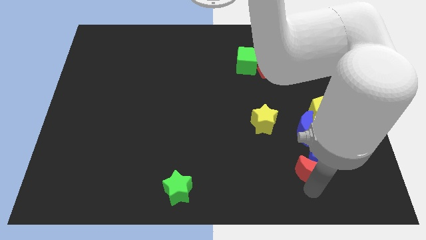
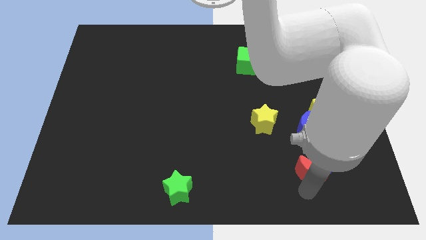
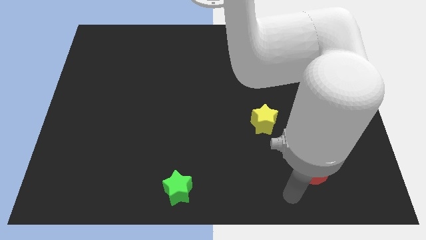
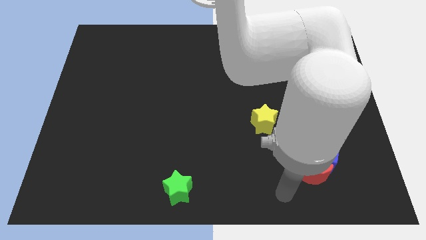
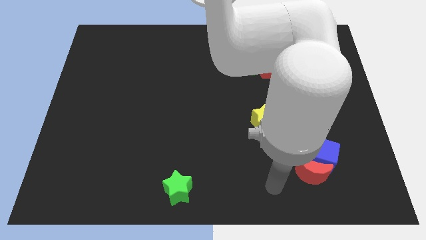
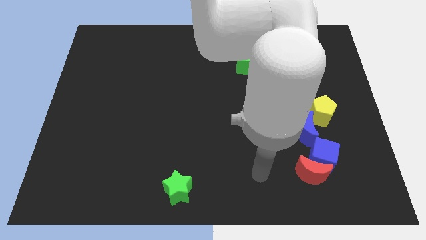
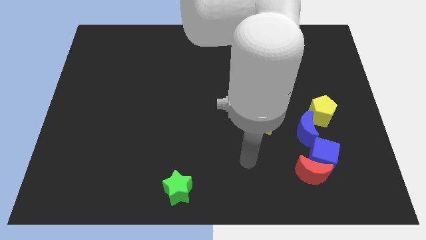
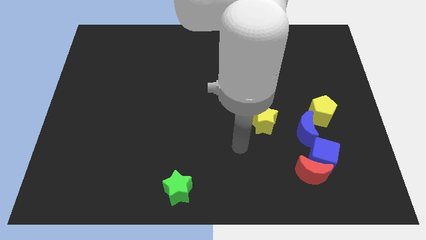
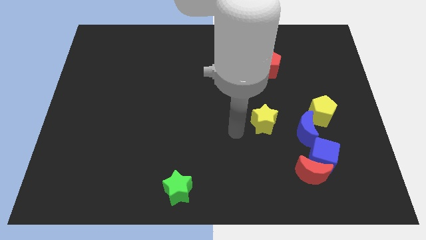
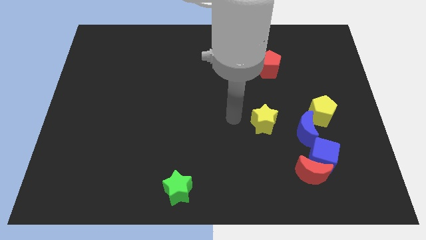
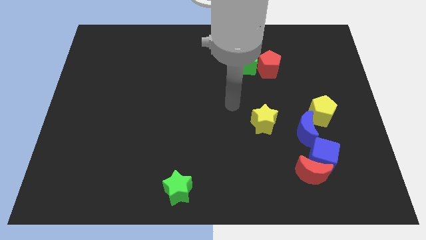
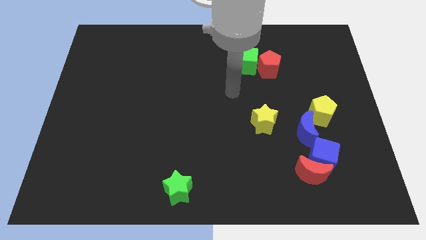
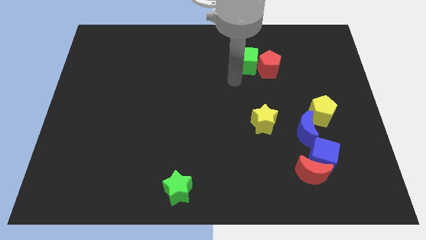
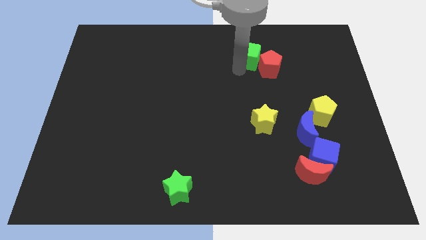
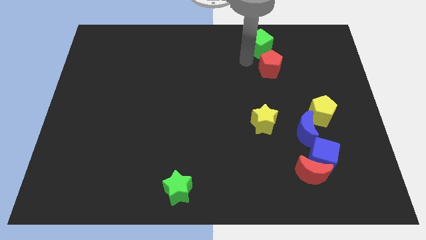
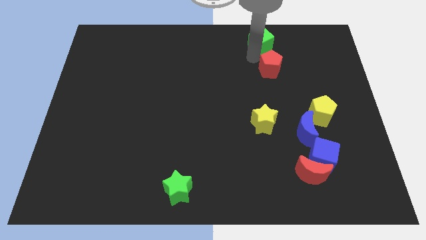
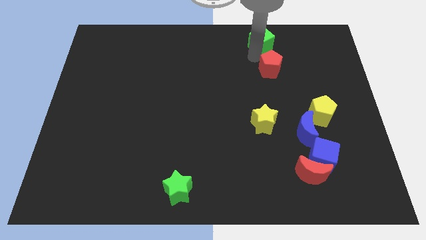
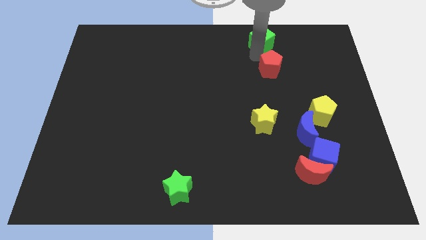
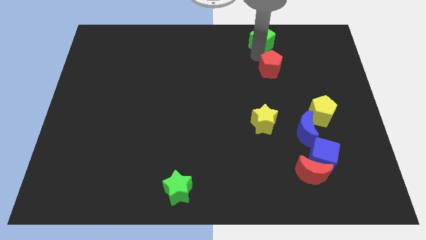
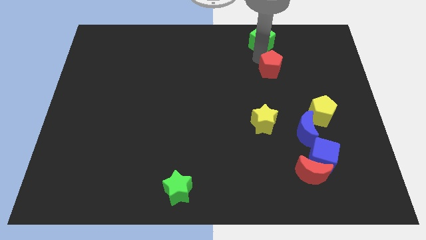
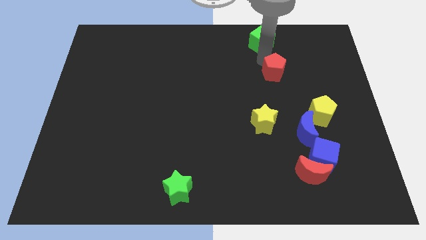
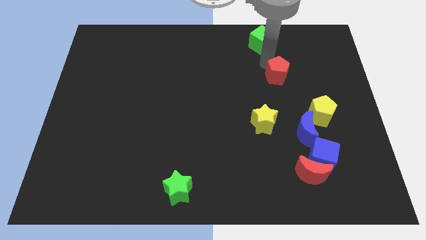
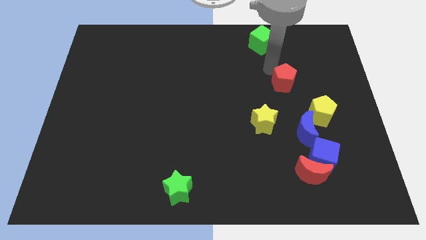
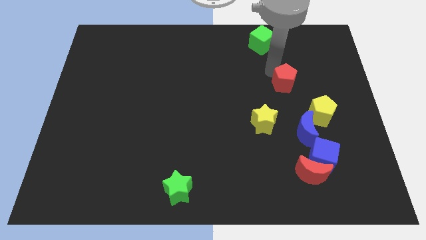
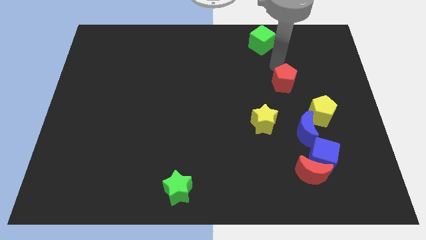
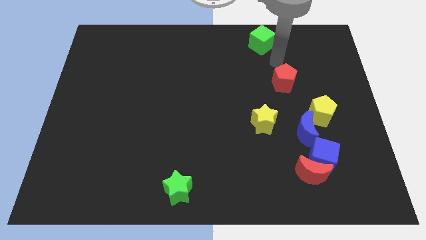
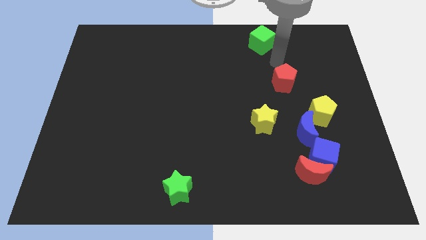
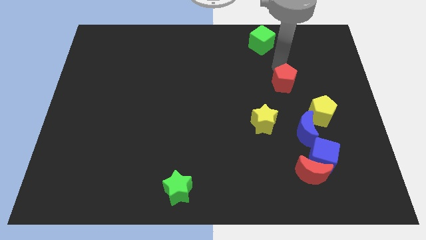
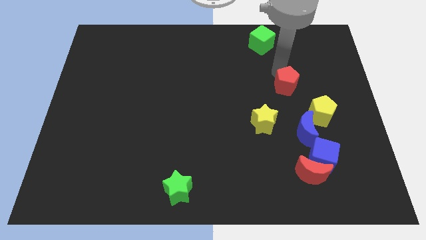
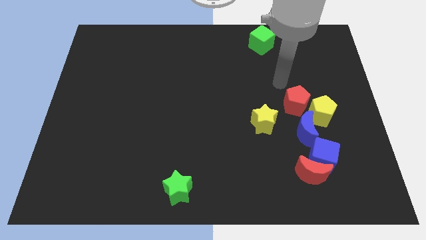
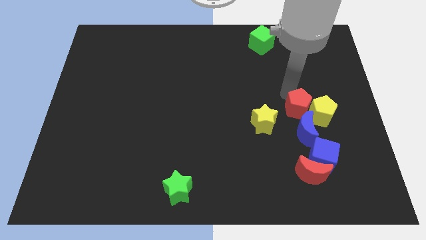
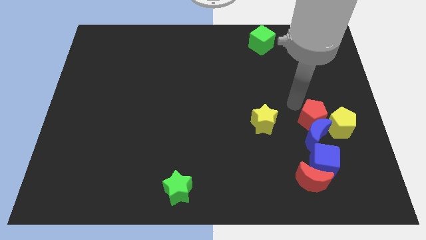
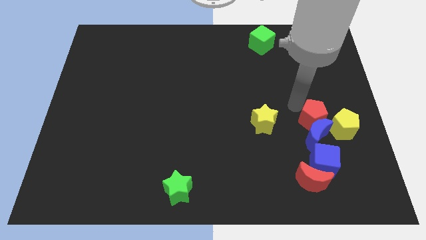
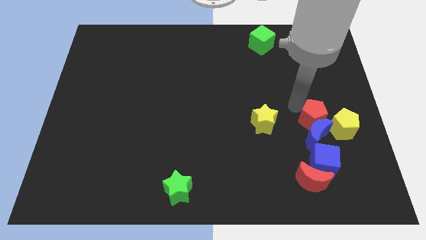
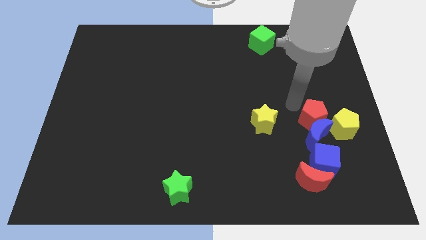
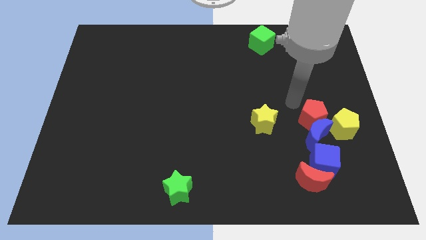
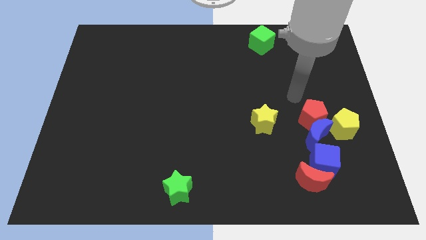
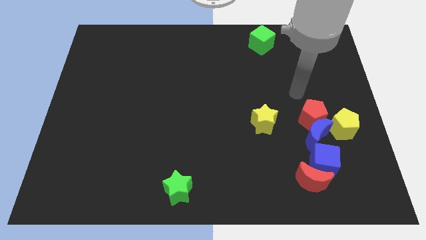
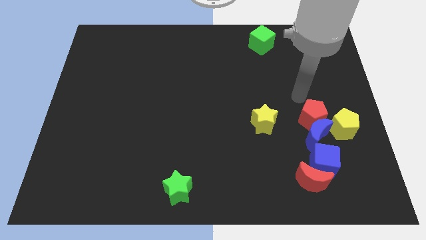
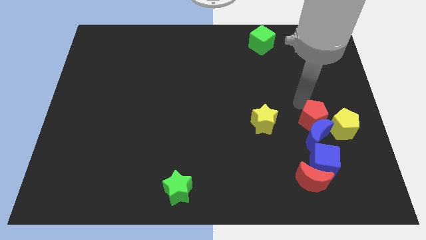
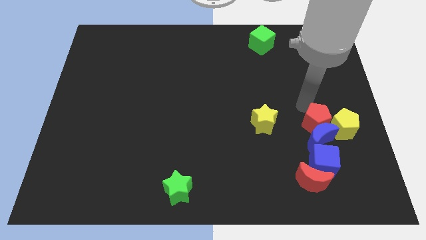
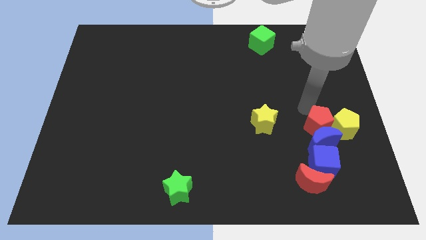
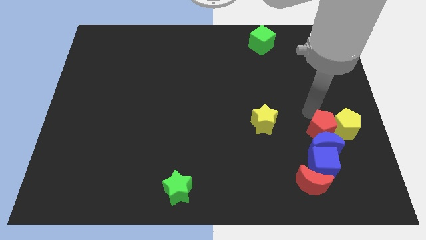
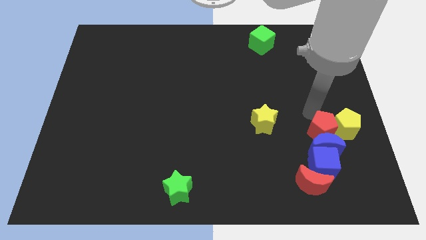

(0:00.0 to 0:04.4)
slide the red pentagon into the group of blocks

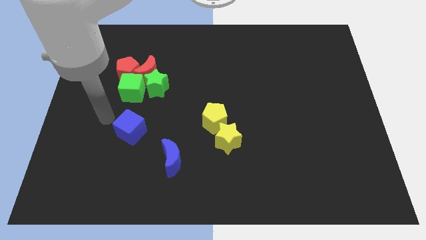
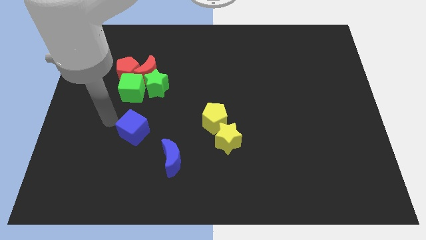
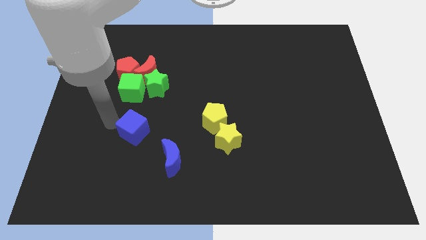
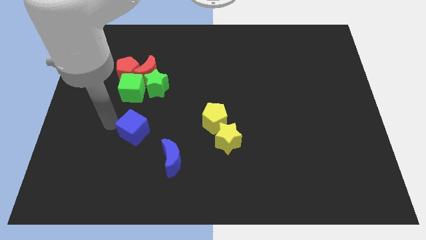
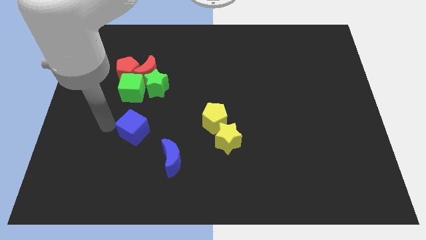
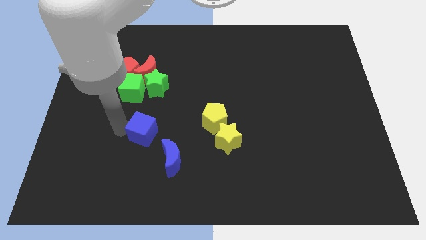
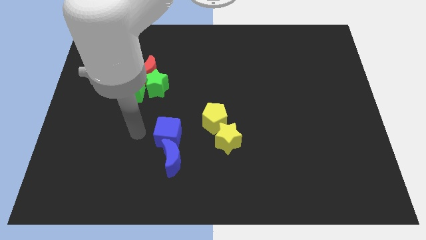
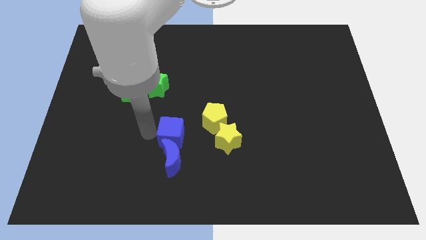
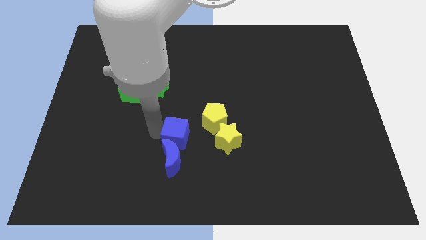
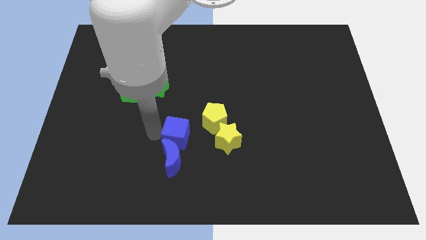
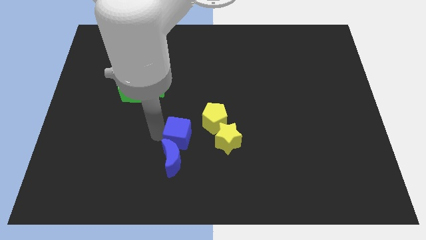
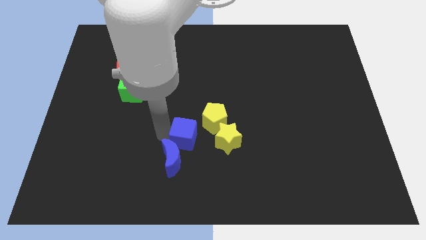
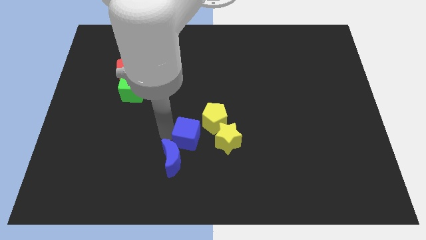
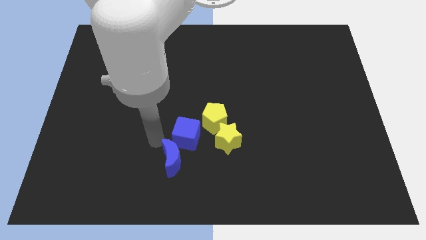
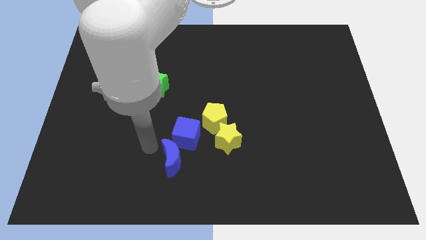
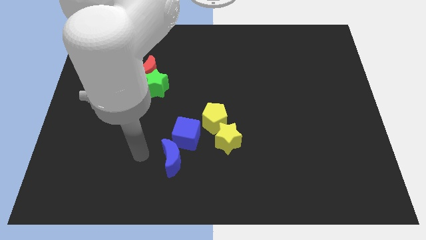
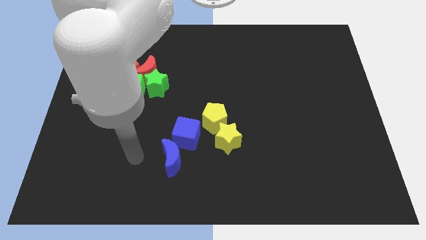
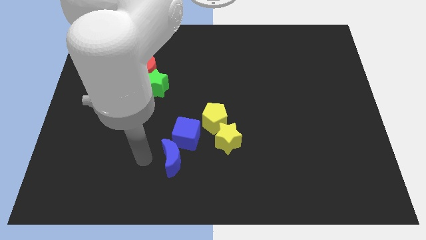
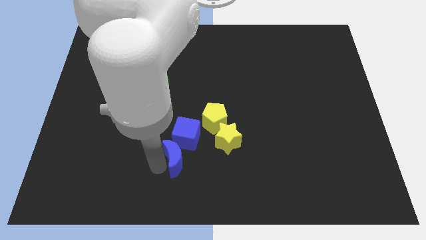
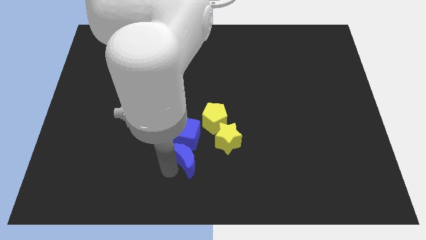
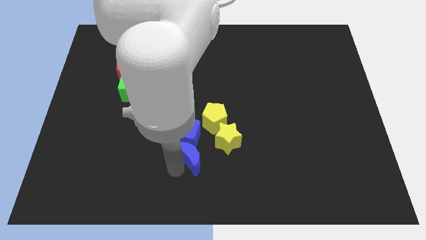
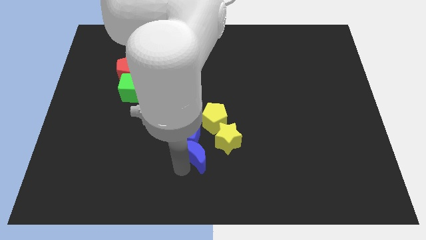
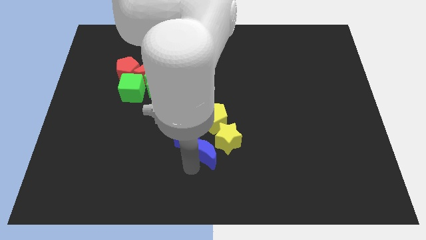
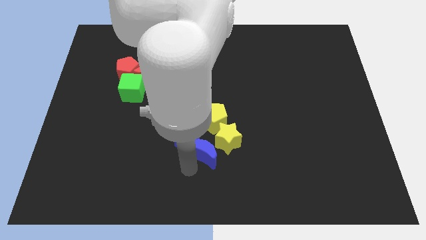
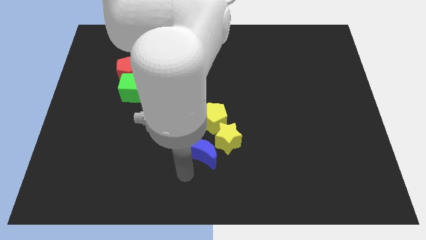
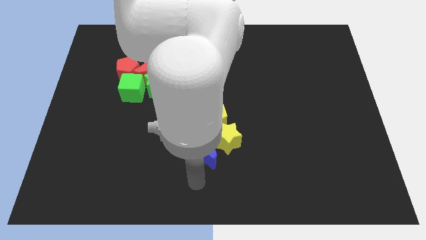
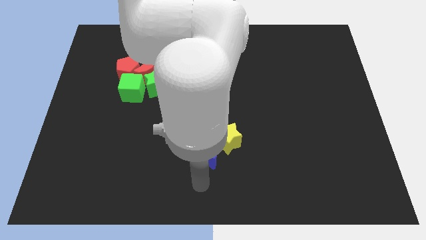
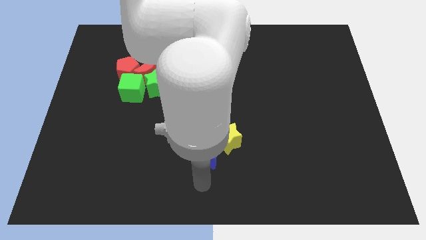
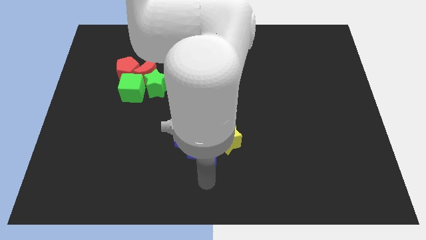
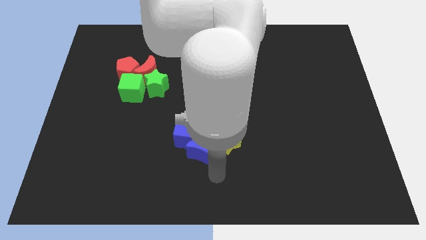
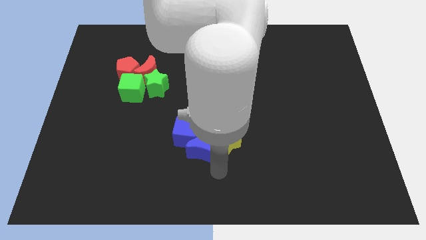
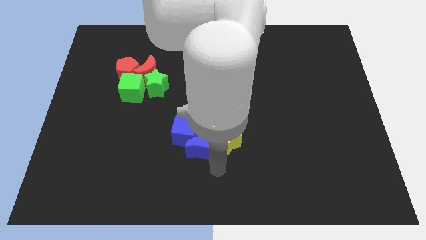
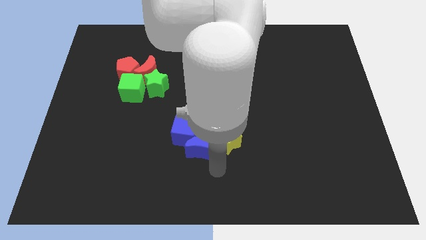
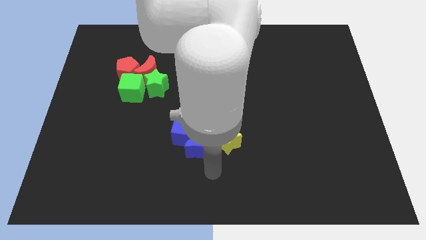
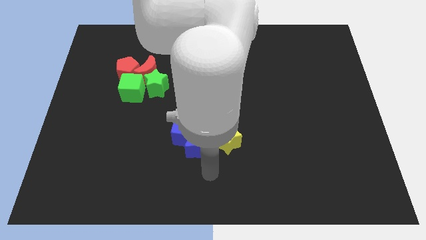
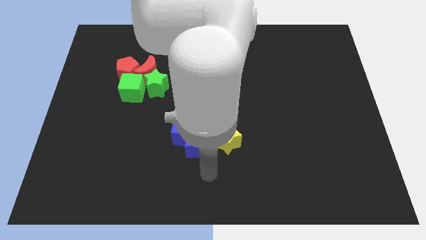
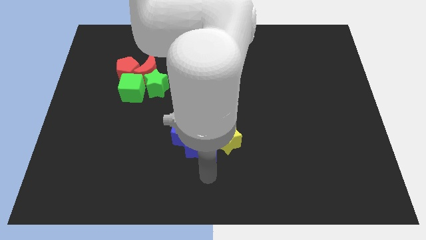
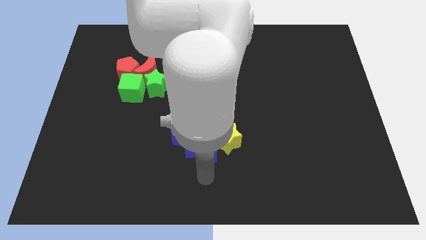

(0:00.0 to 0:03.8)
move blue moon into blue cube

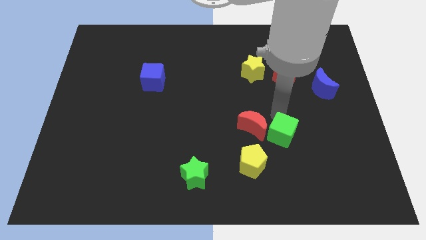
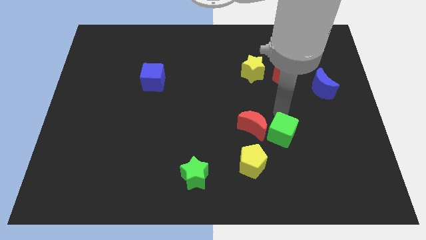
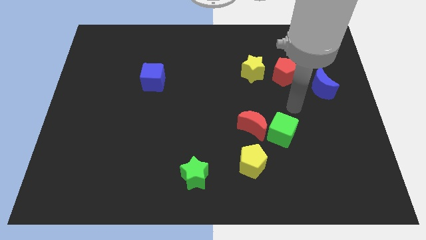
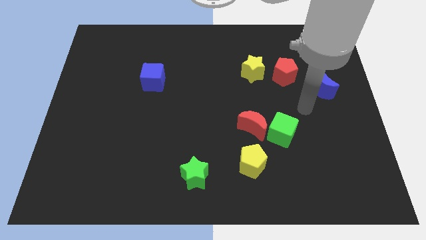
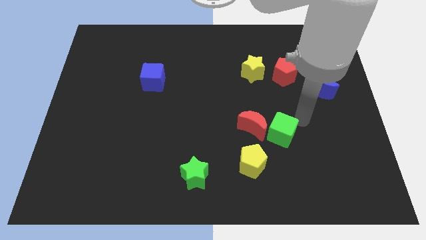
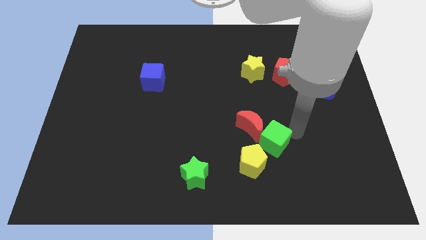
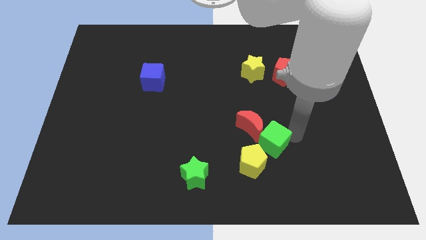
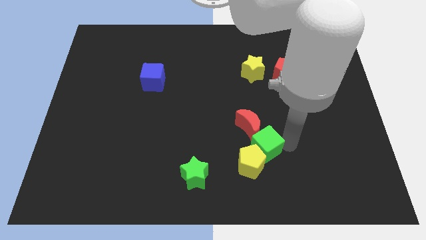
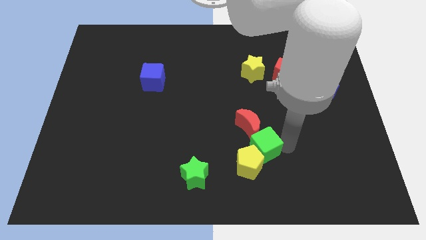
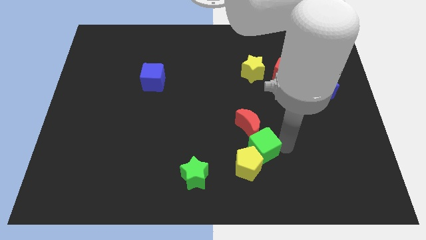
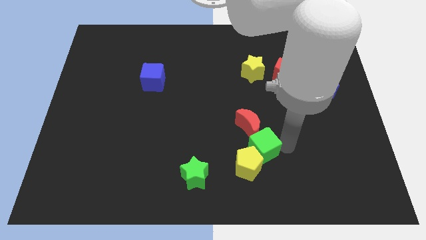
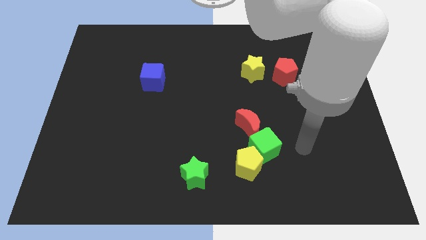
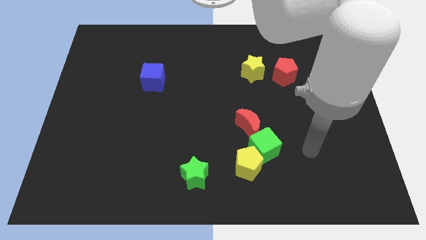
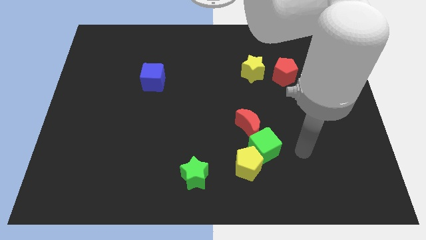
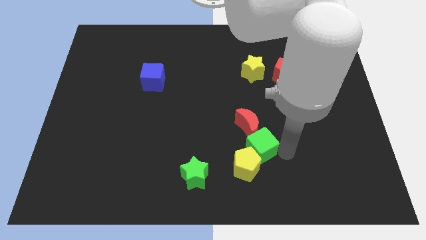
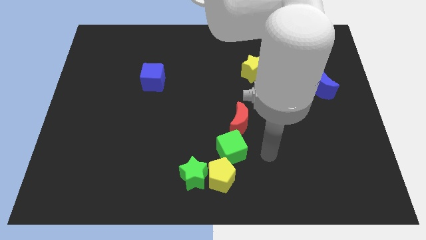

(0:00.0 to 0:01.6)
make a group of red moon green cube and yellow pentagon
